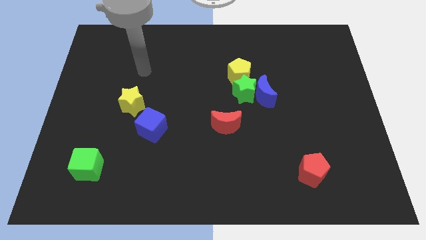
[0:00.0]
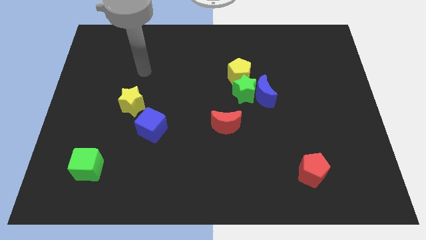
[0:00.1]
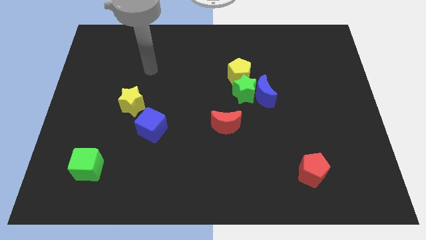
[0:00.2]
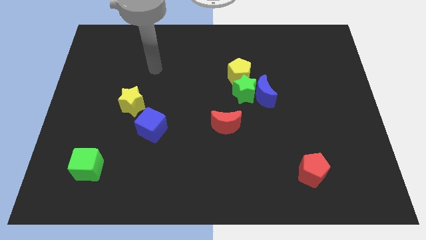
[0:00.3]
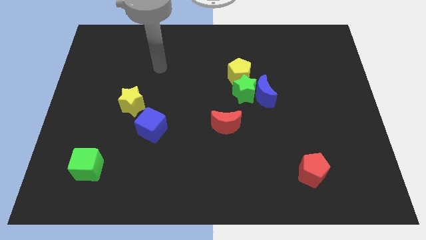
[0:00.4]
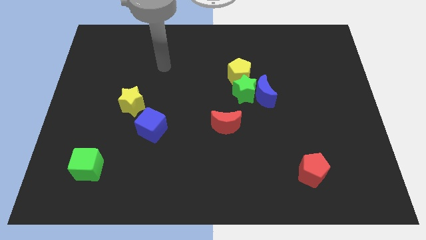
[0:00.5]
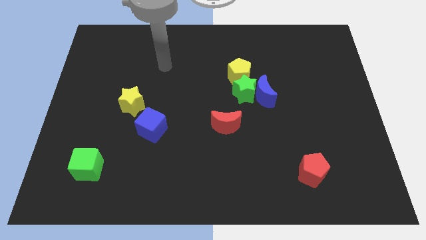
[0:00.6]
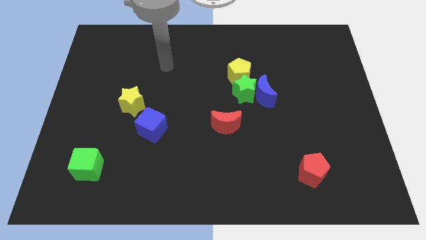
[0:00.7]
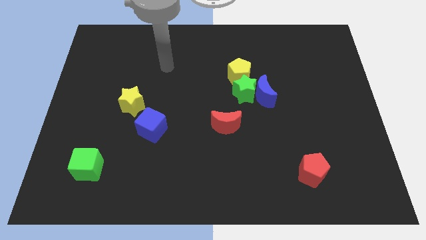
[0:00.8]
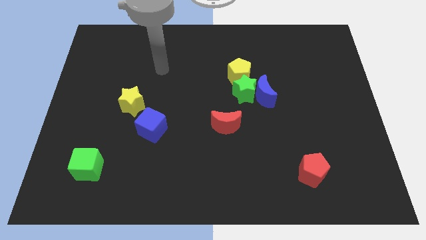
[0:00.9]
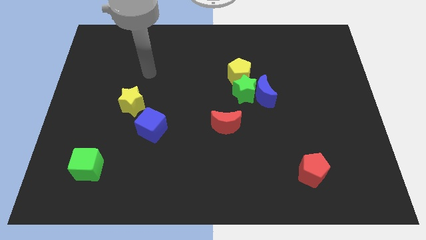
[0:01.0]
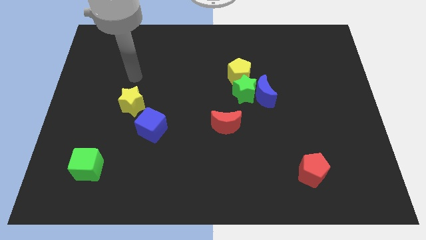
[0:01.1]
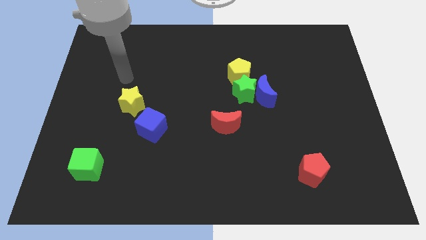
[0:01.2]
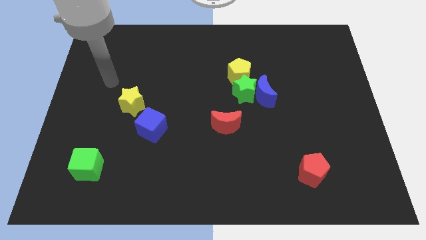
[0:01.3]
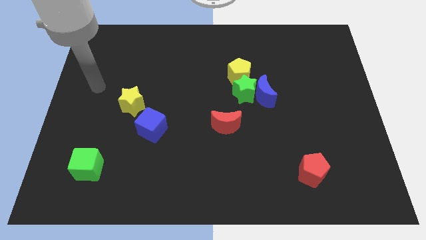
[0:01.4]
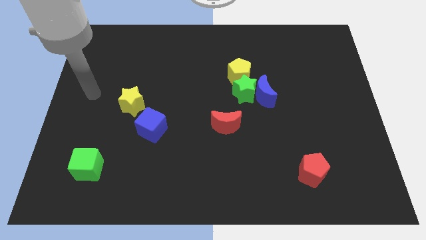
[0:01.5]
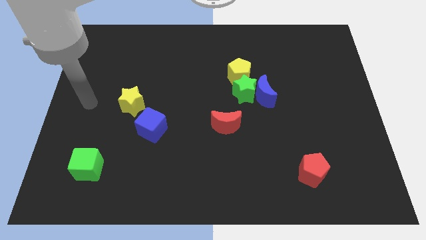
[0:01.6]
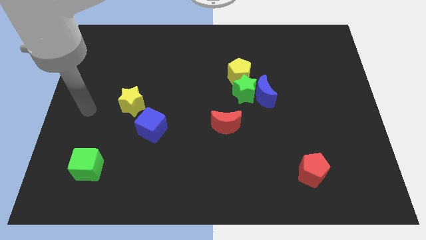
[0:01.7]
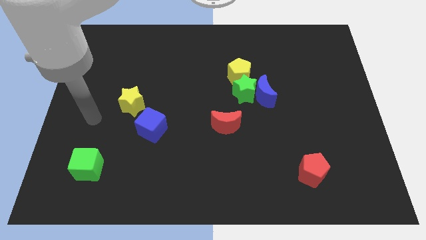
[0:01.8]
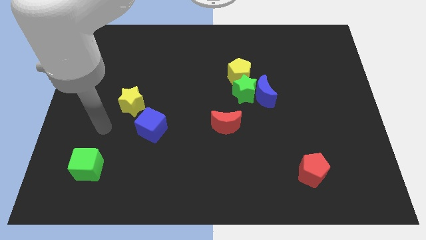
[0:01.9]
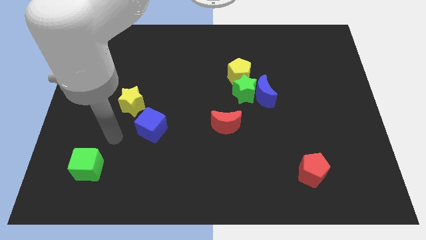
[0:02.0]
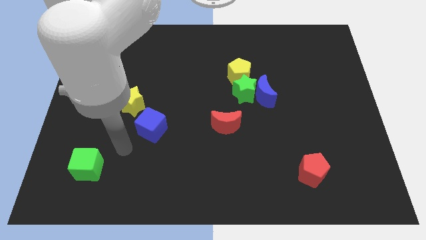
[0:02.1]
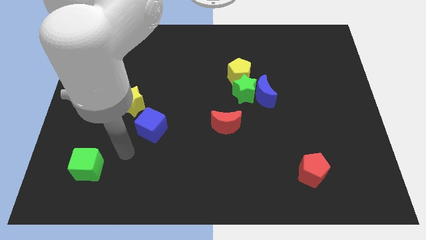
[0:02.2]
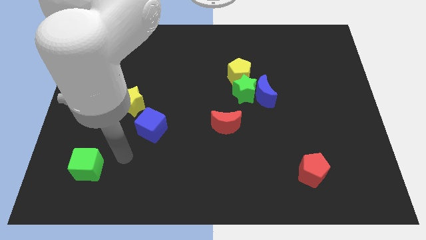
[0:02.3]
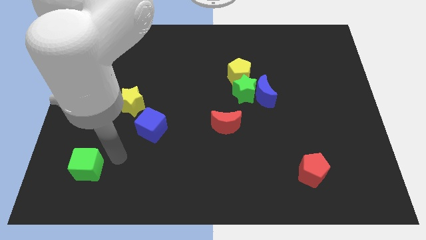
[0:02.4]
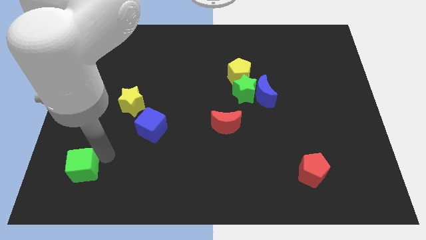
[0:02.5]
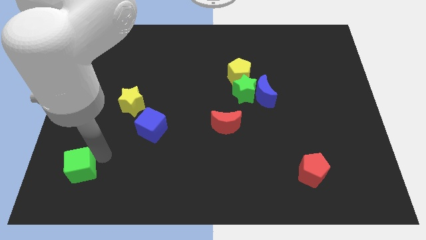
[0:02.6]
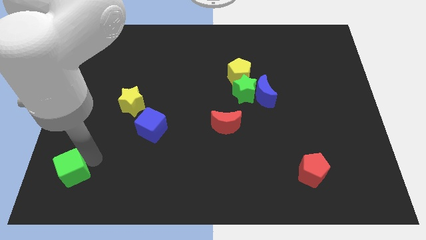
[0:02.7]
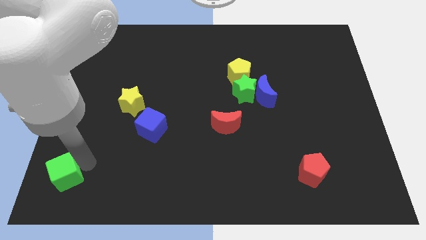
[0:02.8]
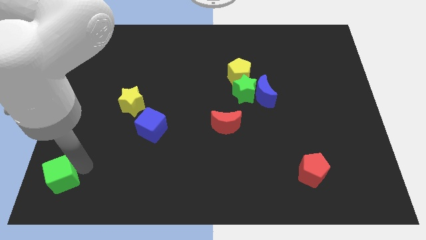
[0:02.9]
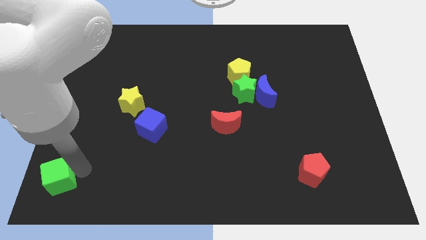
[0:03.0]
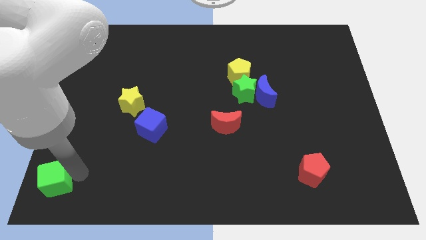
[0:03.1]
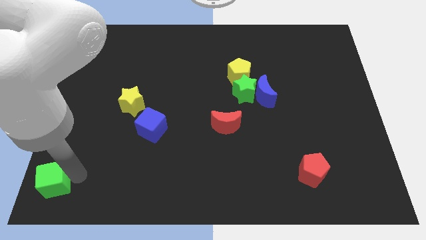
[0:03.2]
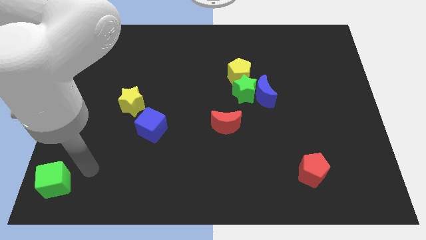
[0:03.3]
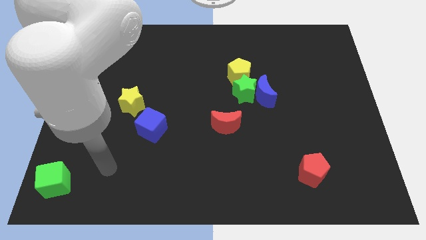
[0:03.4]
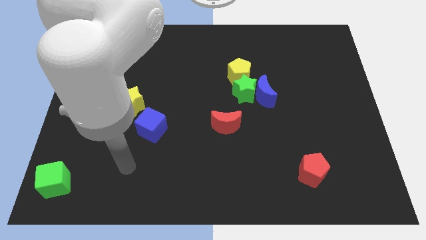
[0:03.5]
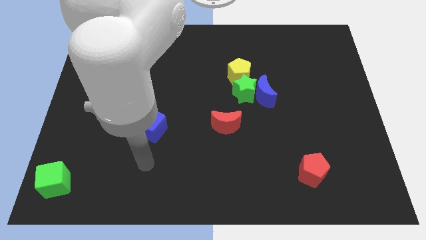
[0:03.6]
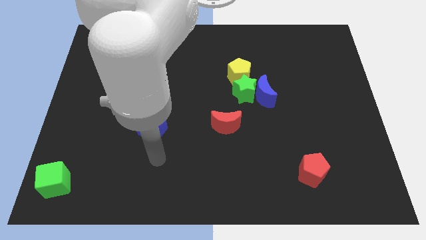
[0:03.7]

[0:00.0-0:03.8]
move the green cube towards the bottom left corner of the board

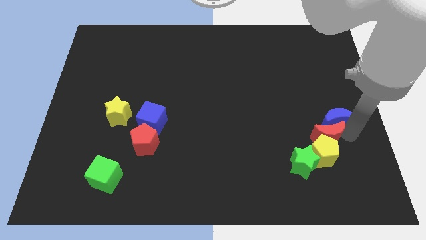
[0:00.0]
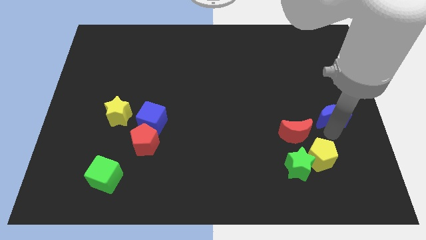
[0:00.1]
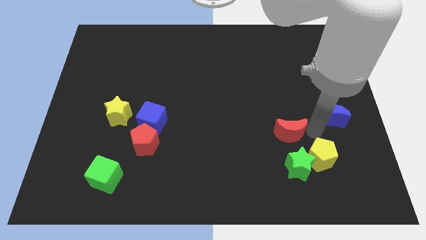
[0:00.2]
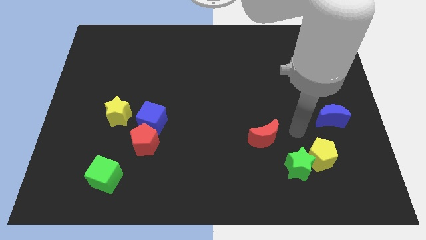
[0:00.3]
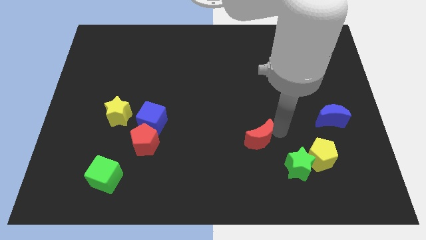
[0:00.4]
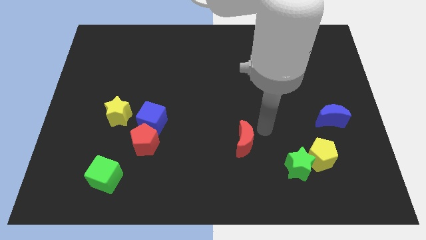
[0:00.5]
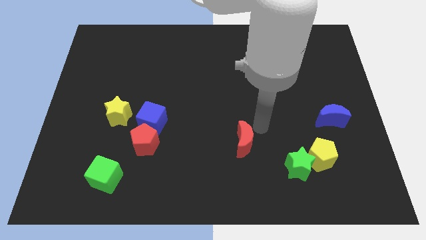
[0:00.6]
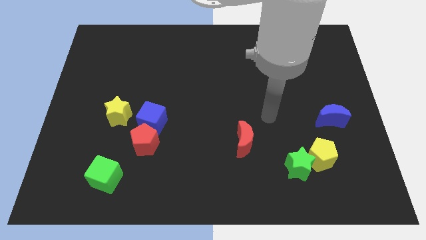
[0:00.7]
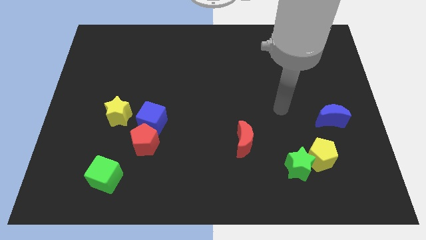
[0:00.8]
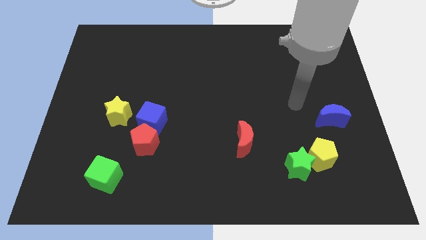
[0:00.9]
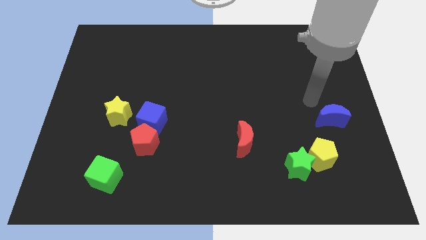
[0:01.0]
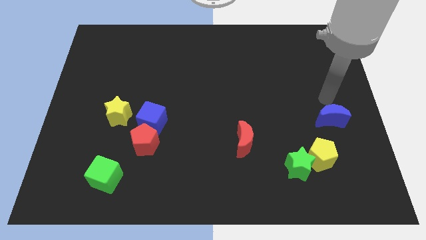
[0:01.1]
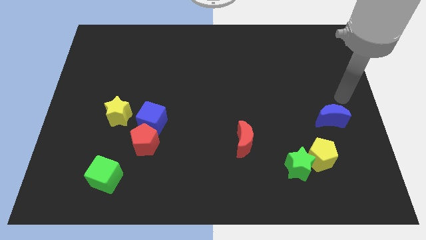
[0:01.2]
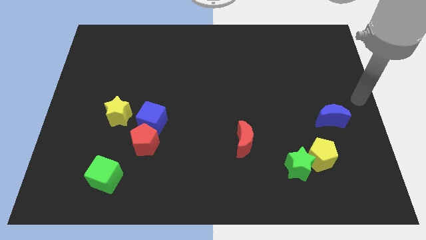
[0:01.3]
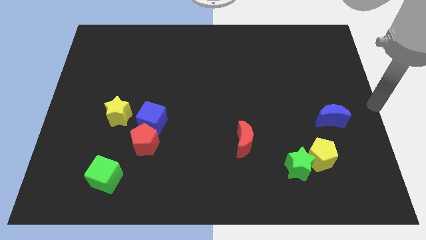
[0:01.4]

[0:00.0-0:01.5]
separate the red moon from the blue and yellow block

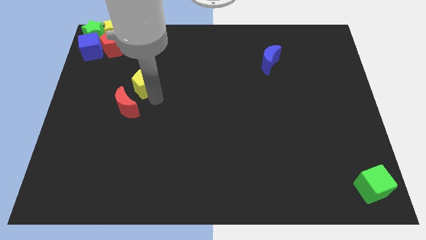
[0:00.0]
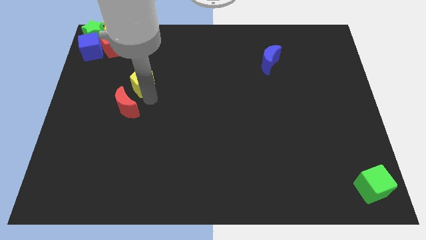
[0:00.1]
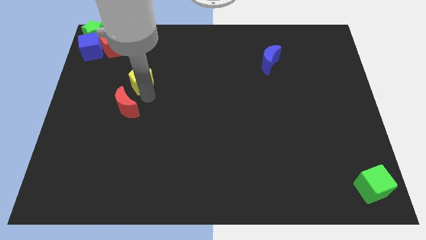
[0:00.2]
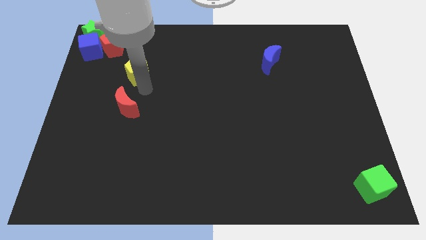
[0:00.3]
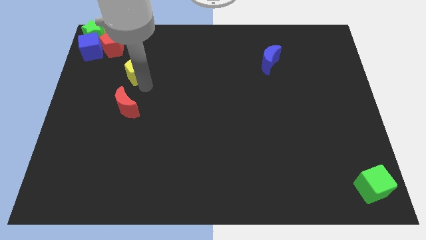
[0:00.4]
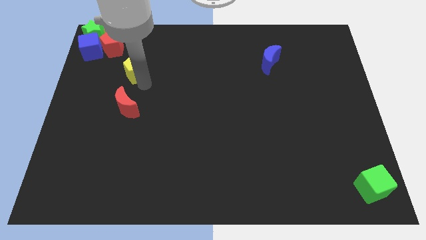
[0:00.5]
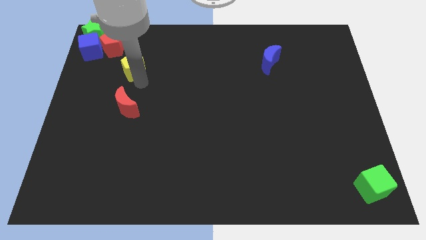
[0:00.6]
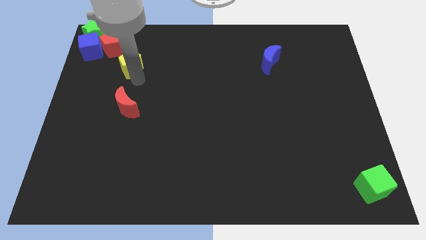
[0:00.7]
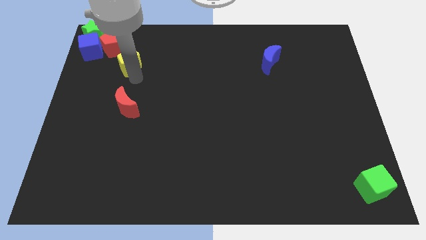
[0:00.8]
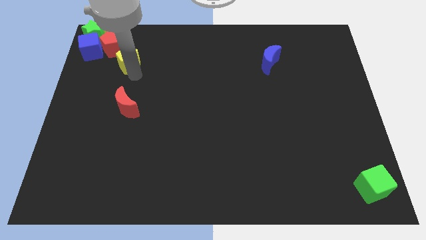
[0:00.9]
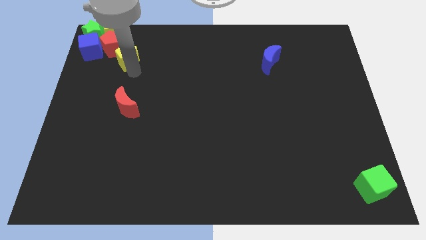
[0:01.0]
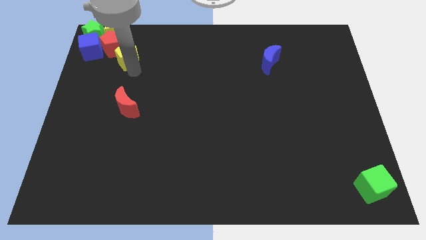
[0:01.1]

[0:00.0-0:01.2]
push the yellow pentagon into the group of blocks

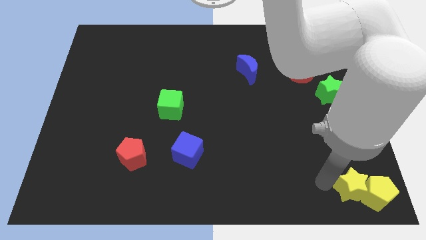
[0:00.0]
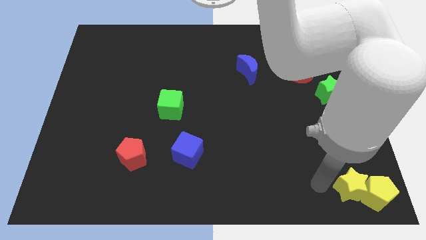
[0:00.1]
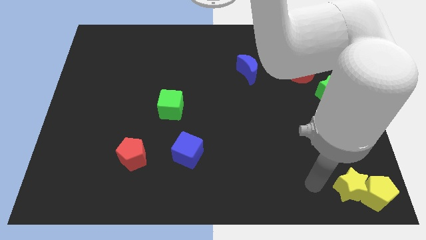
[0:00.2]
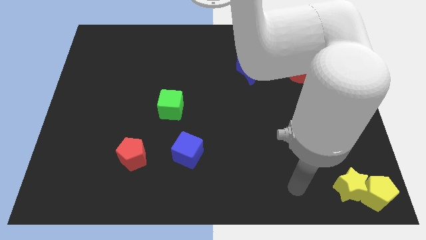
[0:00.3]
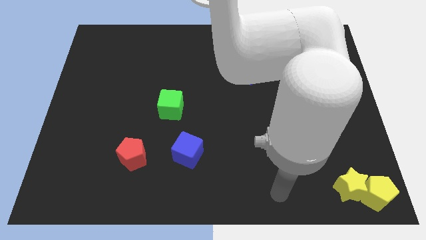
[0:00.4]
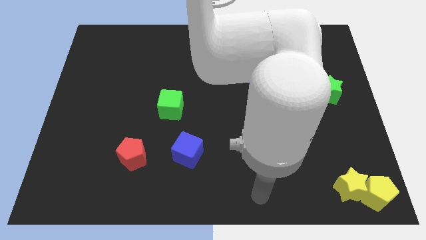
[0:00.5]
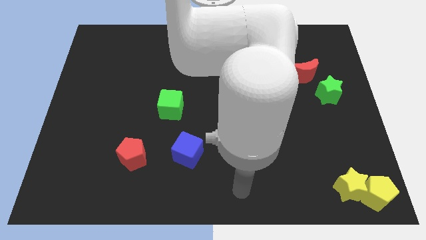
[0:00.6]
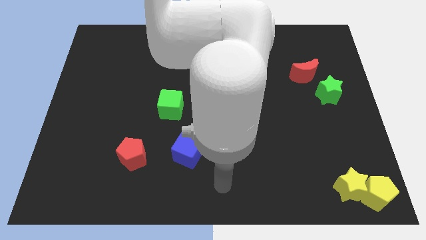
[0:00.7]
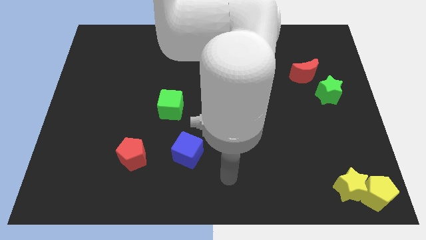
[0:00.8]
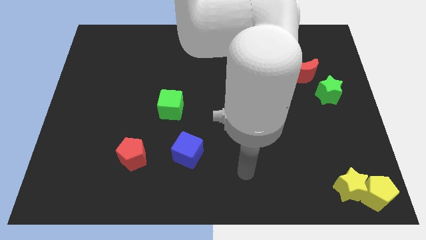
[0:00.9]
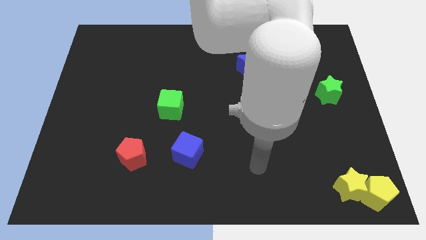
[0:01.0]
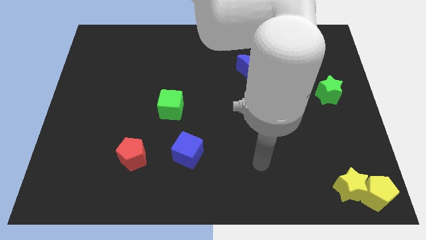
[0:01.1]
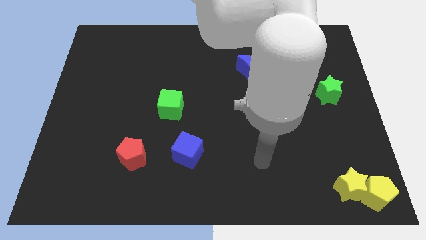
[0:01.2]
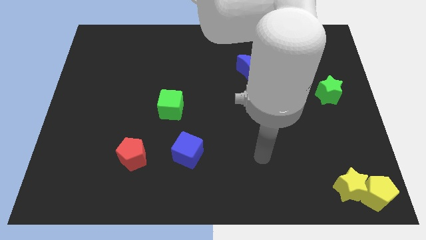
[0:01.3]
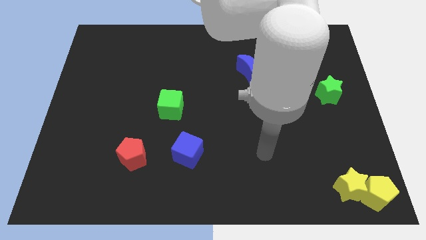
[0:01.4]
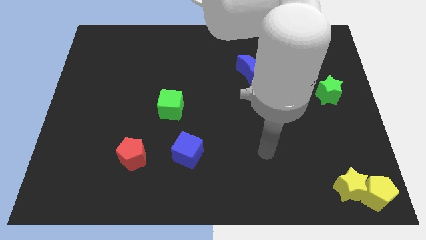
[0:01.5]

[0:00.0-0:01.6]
move your hand away from the yellow star

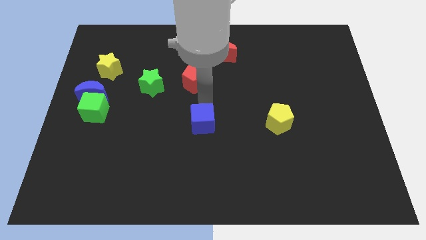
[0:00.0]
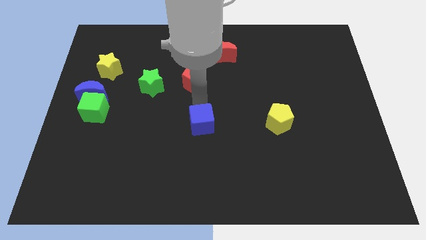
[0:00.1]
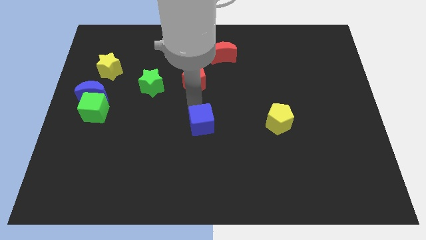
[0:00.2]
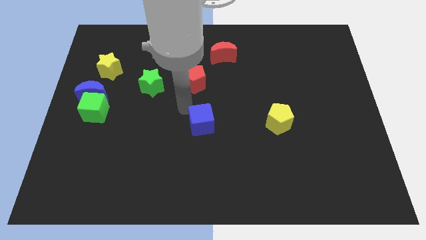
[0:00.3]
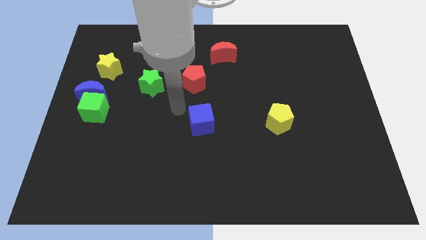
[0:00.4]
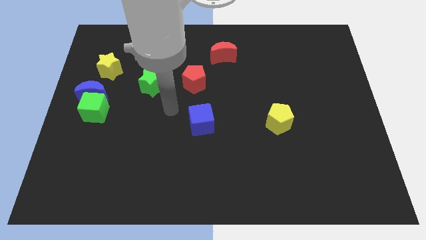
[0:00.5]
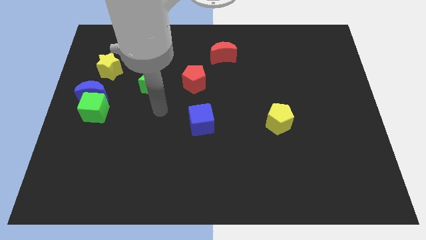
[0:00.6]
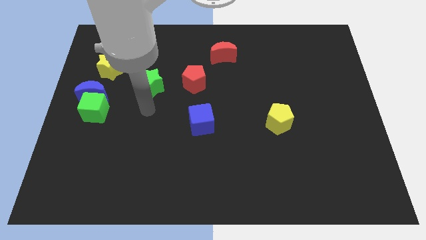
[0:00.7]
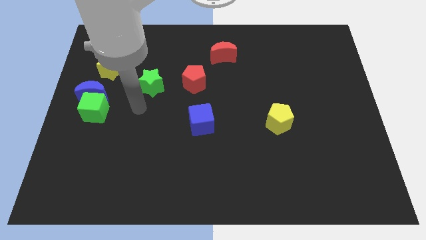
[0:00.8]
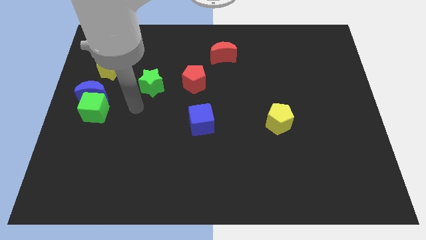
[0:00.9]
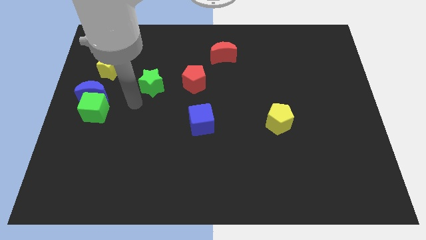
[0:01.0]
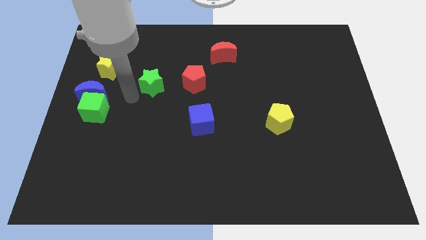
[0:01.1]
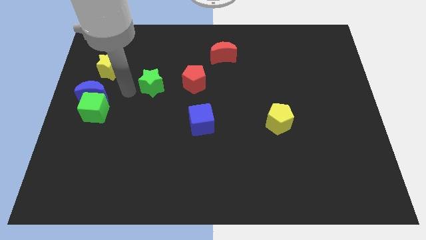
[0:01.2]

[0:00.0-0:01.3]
move your arm away from the blue cube
